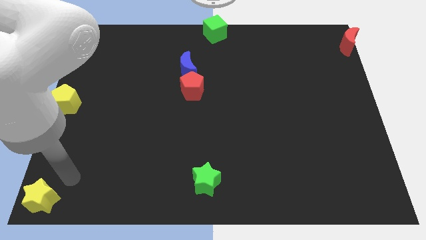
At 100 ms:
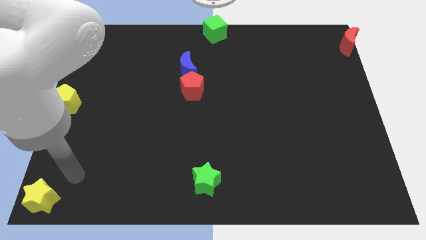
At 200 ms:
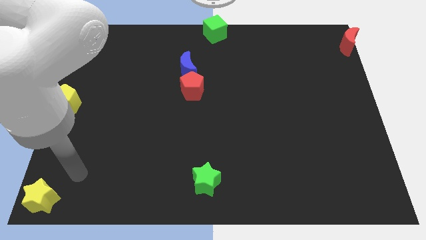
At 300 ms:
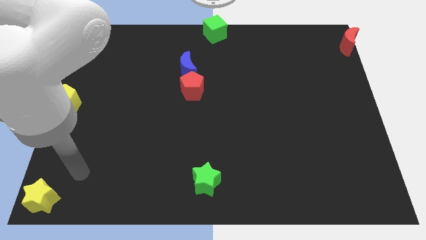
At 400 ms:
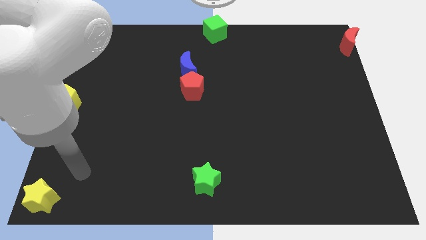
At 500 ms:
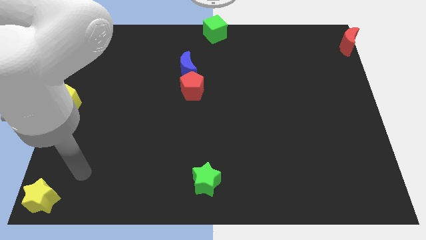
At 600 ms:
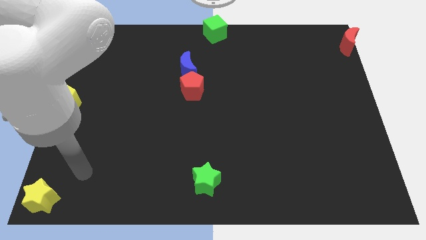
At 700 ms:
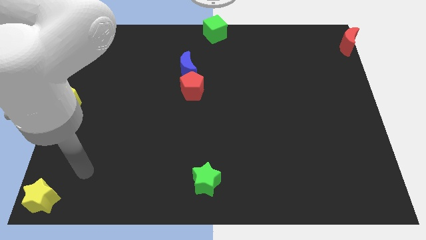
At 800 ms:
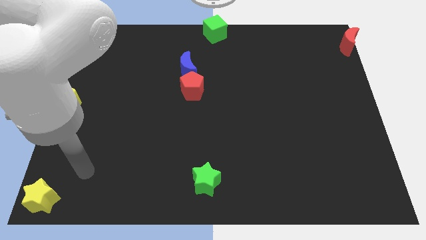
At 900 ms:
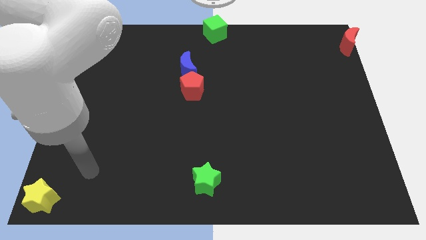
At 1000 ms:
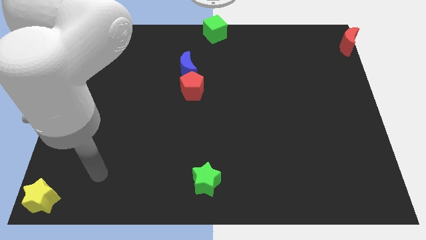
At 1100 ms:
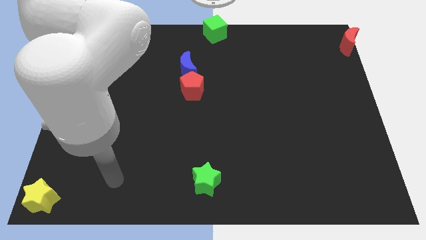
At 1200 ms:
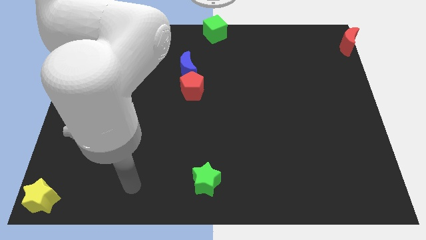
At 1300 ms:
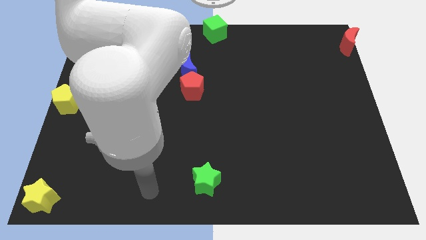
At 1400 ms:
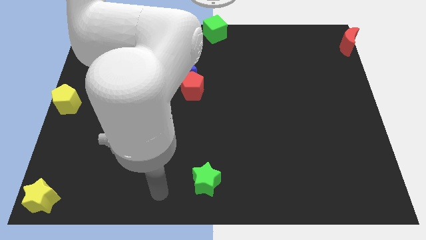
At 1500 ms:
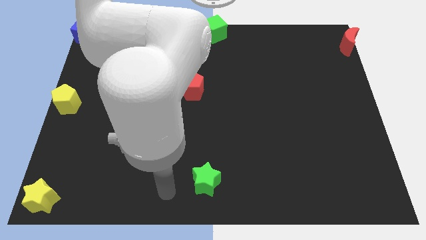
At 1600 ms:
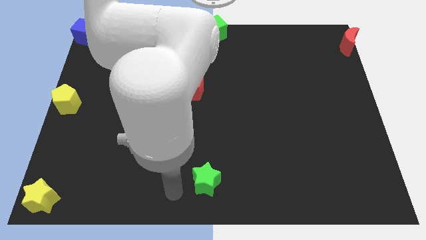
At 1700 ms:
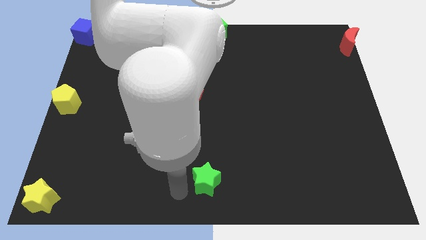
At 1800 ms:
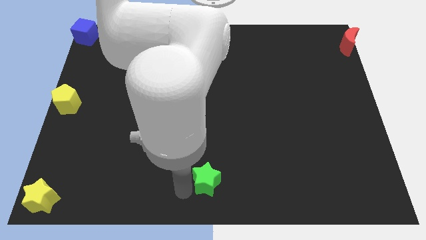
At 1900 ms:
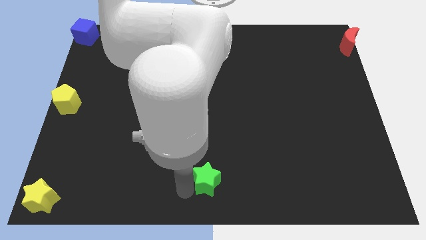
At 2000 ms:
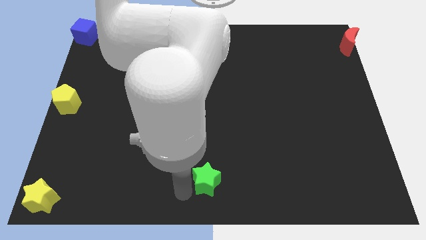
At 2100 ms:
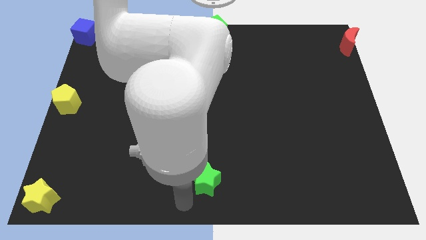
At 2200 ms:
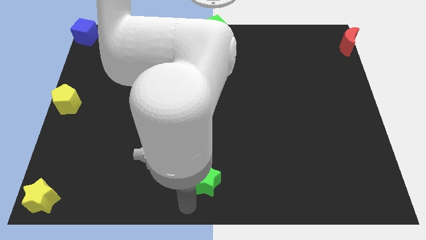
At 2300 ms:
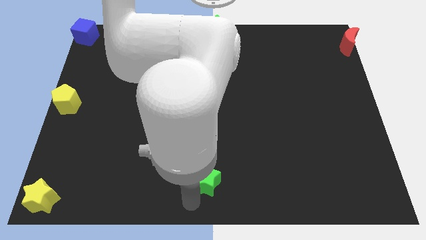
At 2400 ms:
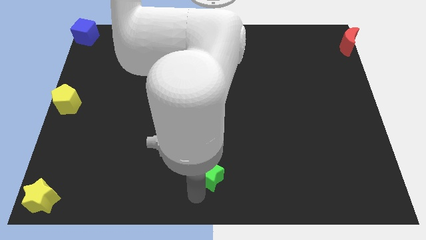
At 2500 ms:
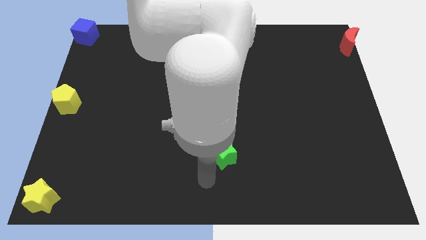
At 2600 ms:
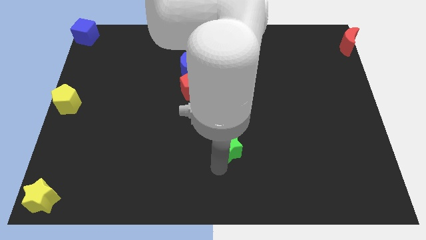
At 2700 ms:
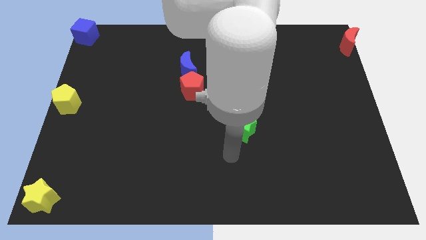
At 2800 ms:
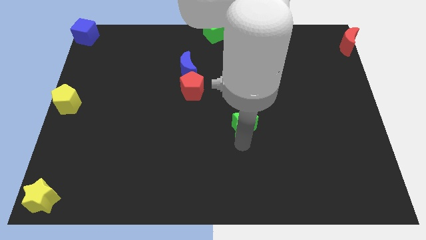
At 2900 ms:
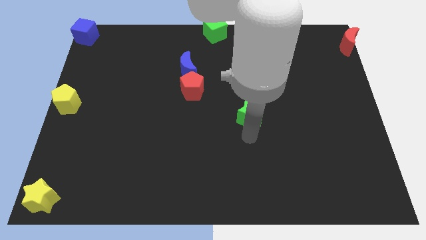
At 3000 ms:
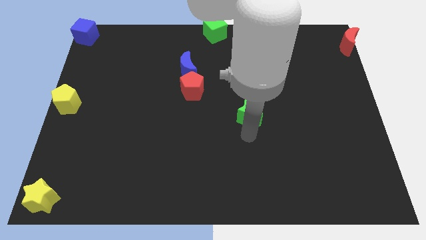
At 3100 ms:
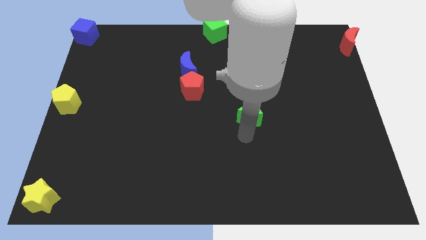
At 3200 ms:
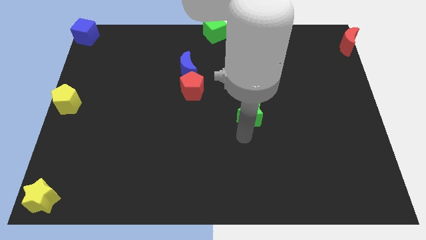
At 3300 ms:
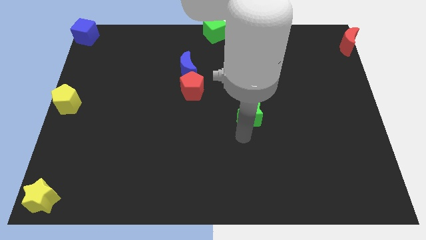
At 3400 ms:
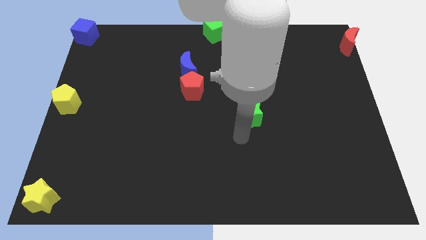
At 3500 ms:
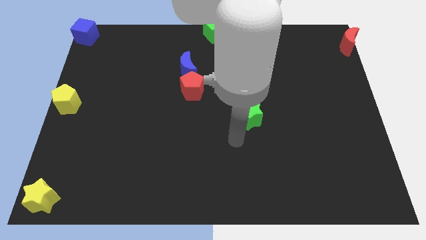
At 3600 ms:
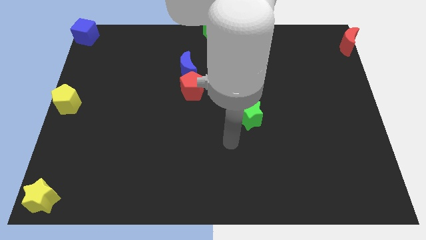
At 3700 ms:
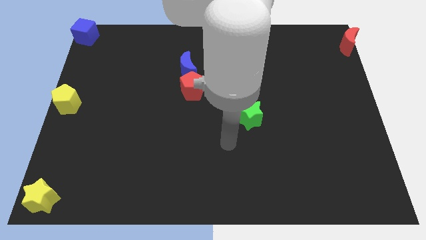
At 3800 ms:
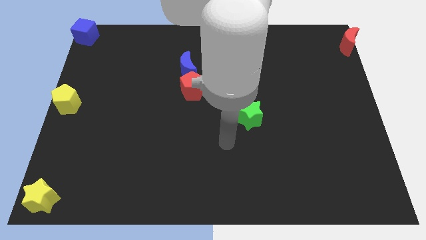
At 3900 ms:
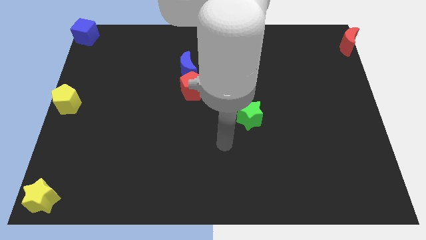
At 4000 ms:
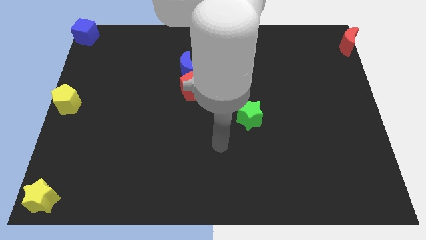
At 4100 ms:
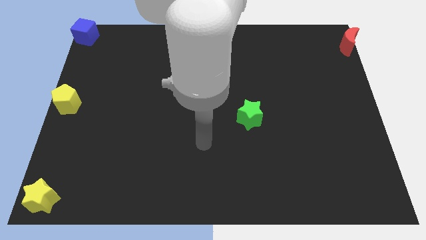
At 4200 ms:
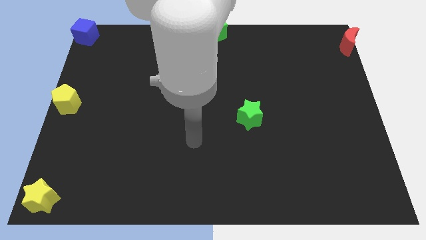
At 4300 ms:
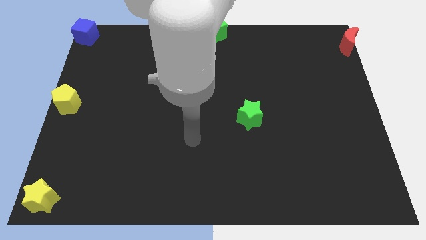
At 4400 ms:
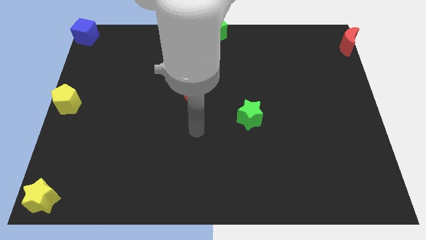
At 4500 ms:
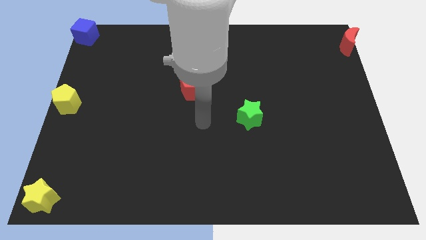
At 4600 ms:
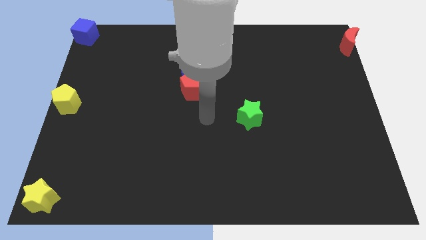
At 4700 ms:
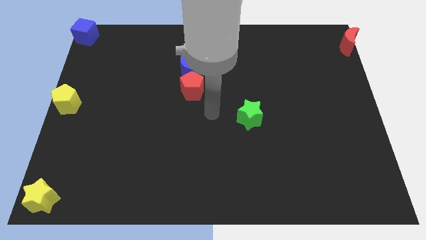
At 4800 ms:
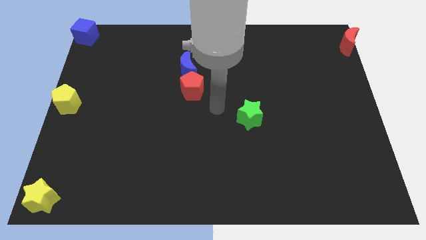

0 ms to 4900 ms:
push the green star upwards

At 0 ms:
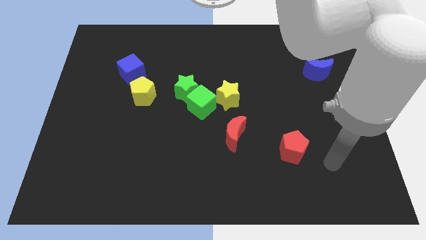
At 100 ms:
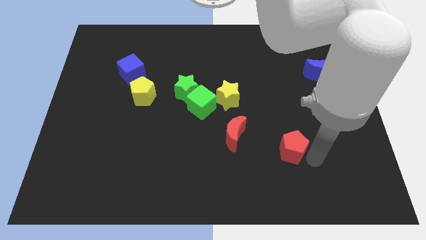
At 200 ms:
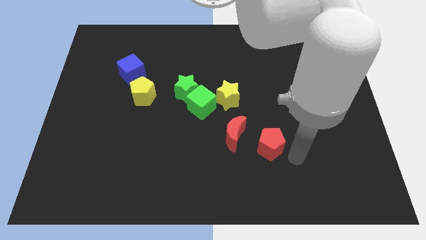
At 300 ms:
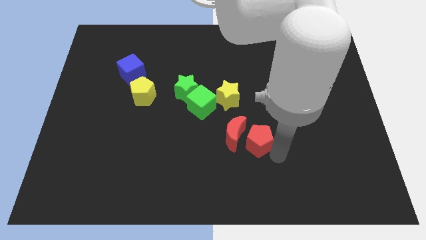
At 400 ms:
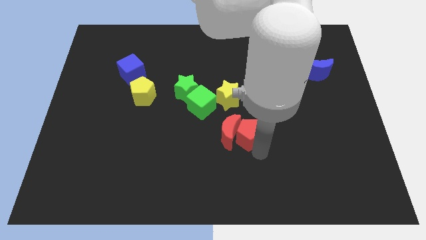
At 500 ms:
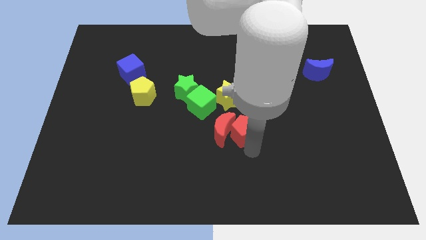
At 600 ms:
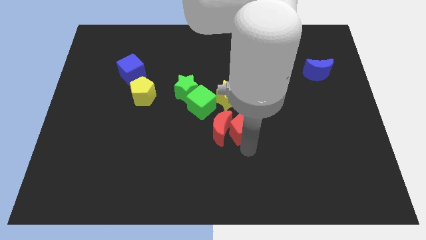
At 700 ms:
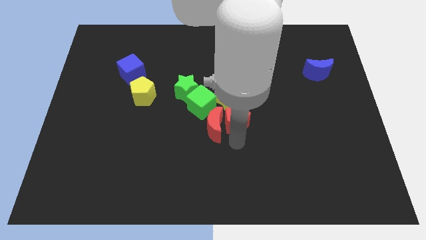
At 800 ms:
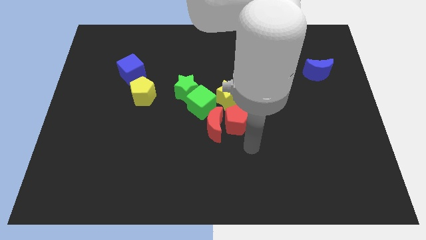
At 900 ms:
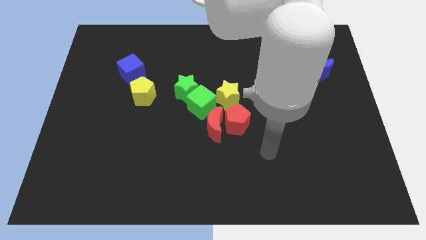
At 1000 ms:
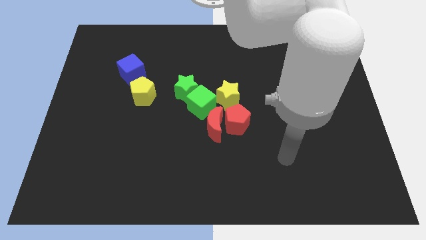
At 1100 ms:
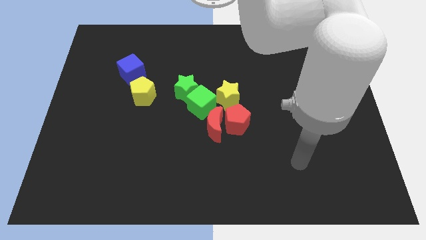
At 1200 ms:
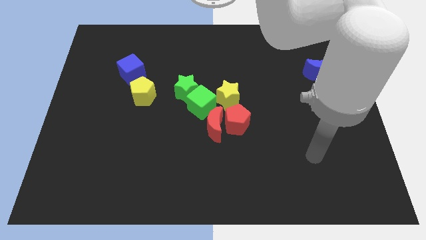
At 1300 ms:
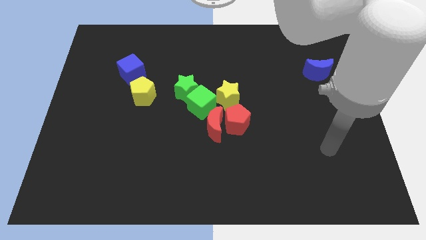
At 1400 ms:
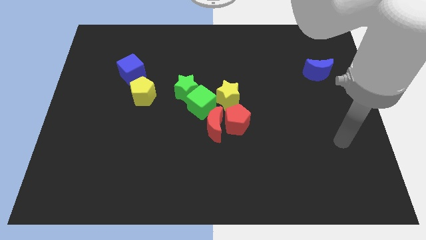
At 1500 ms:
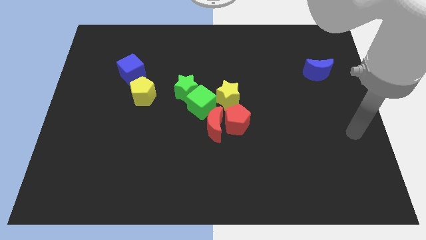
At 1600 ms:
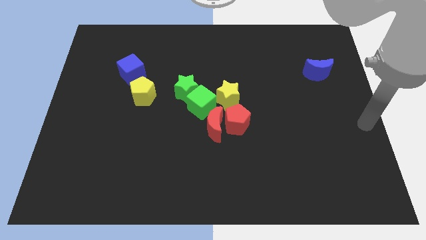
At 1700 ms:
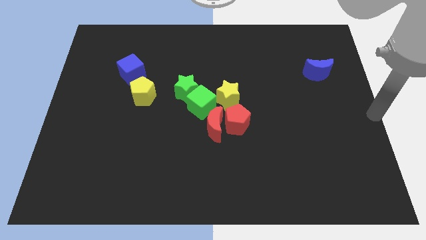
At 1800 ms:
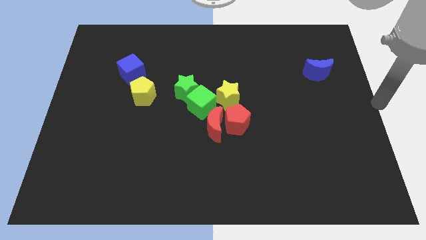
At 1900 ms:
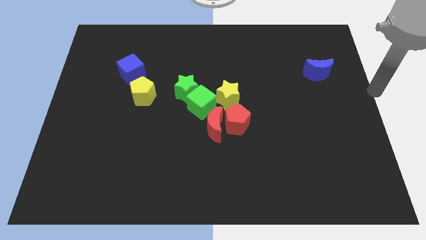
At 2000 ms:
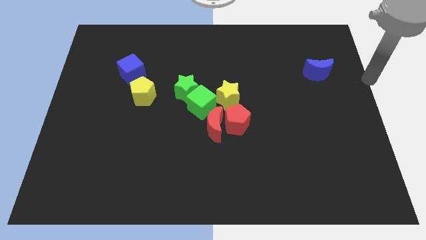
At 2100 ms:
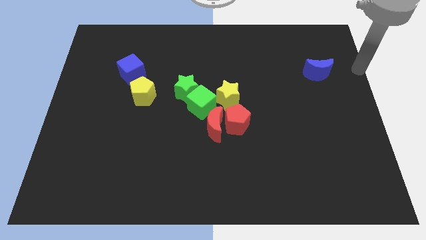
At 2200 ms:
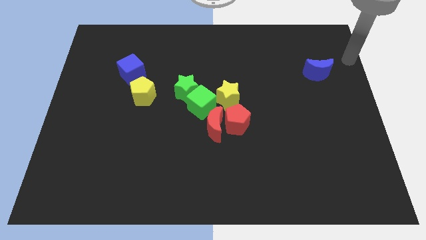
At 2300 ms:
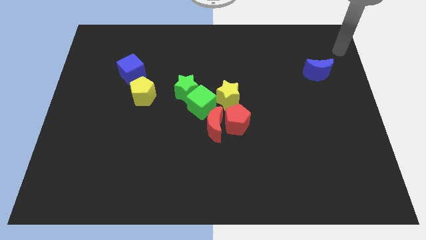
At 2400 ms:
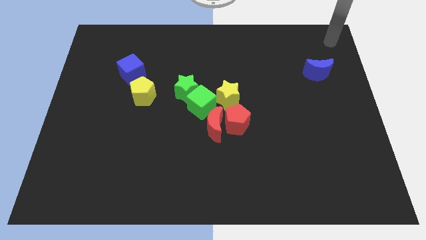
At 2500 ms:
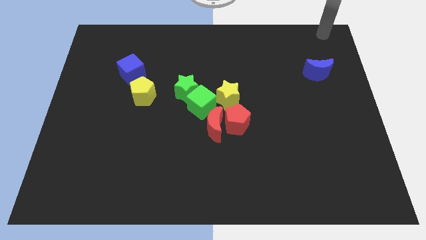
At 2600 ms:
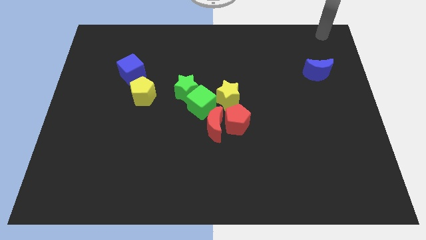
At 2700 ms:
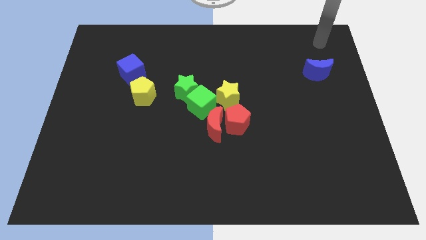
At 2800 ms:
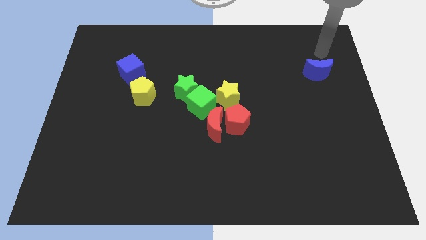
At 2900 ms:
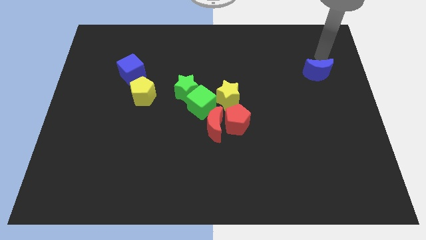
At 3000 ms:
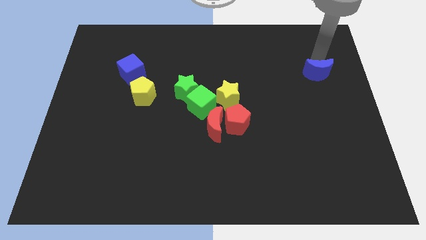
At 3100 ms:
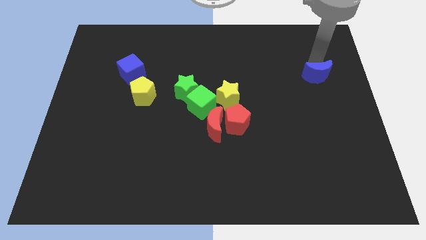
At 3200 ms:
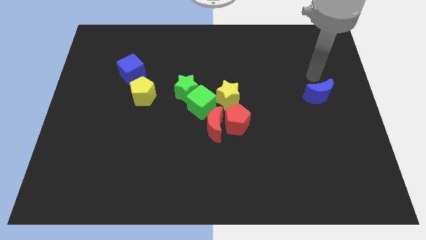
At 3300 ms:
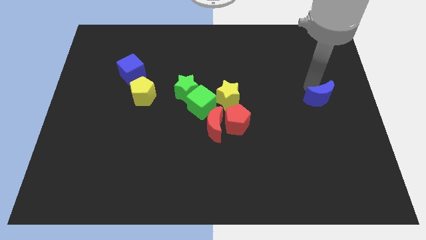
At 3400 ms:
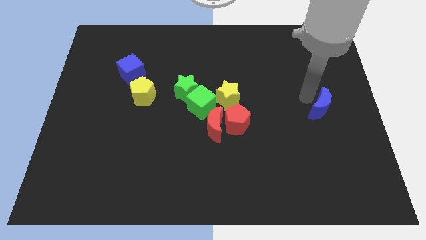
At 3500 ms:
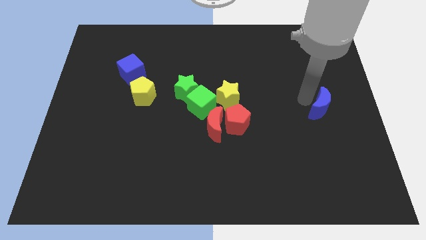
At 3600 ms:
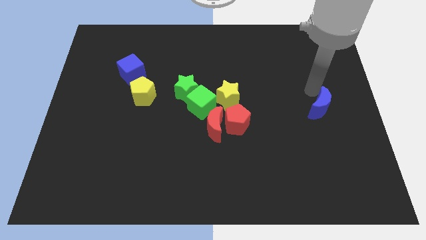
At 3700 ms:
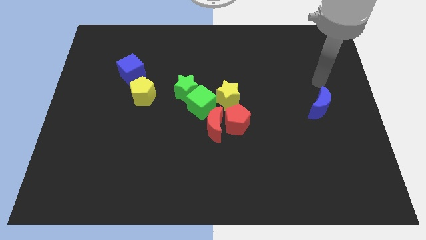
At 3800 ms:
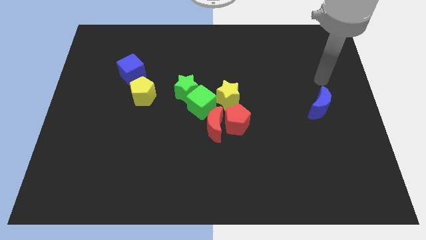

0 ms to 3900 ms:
drag the blue moon to parallel to the right of the red pentagin
